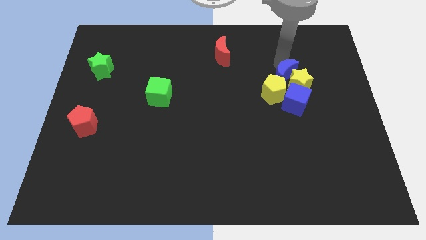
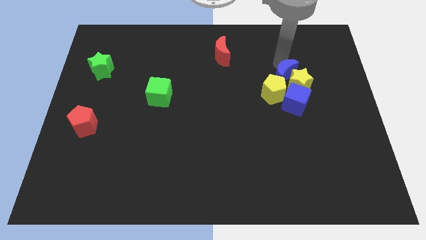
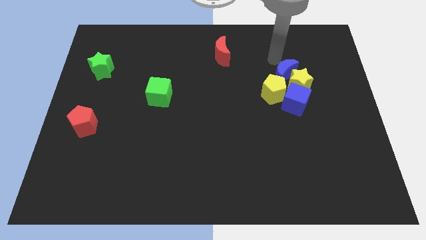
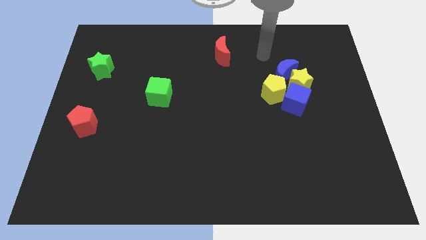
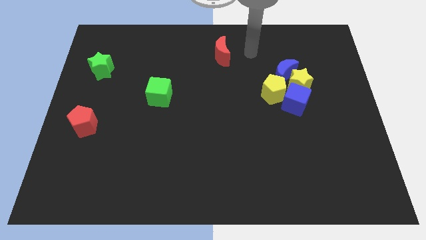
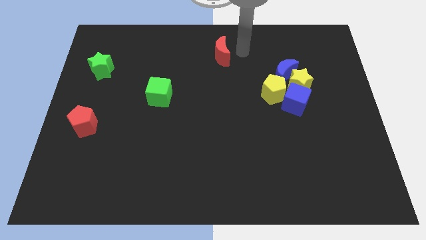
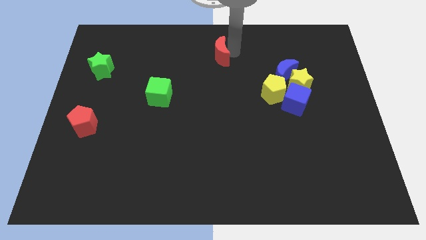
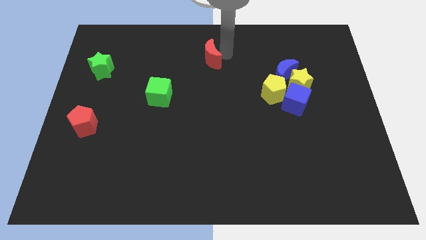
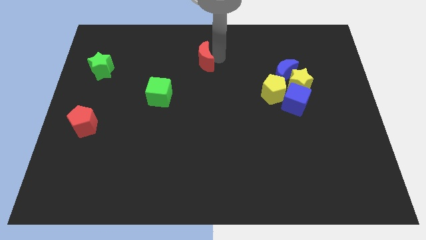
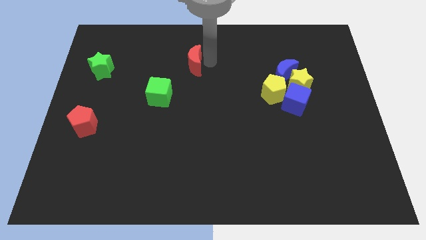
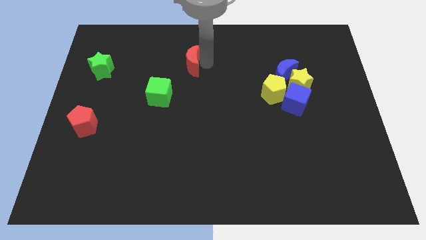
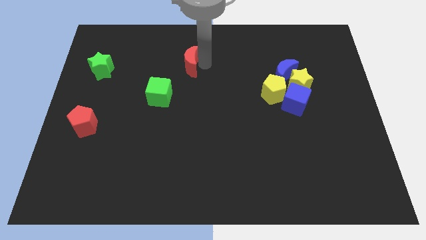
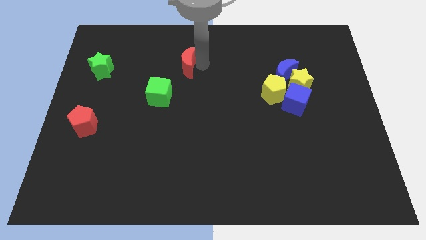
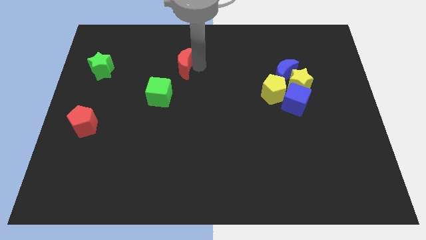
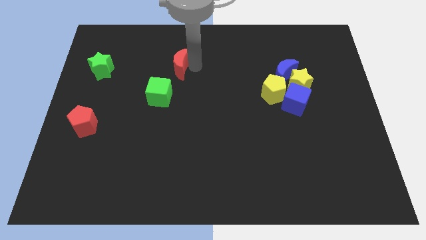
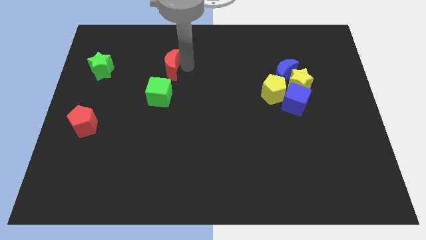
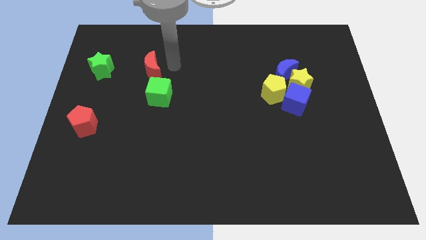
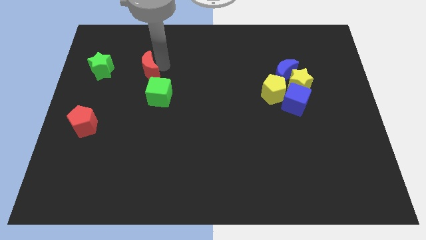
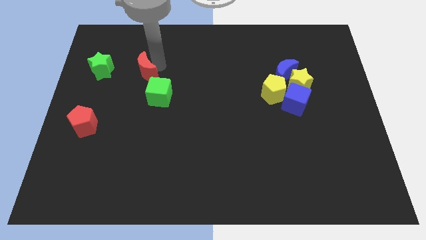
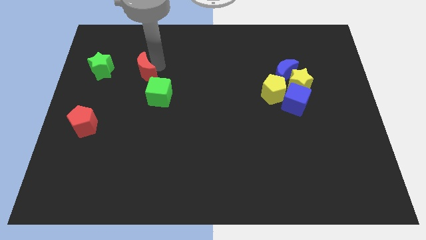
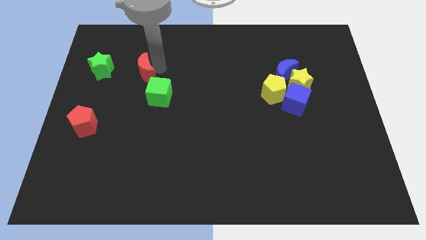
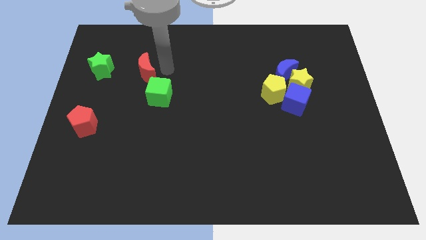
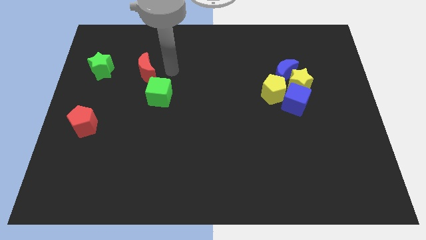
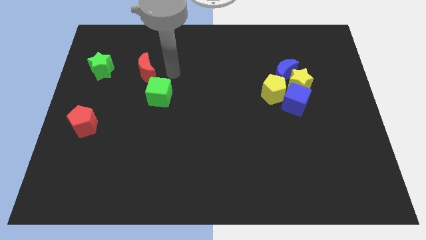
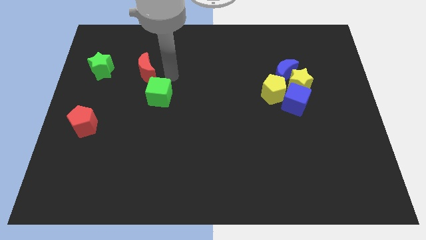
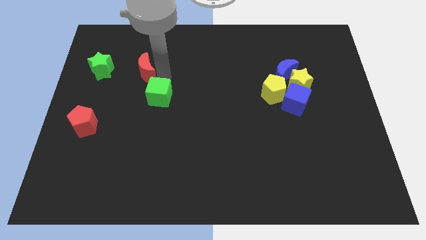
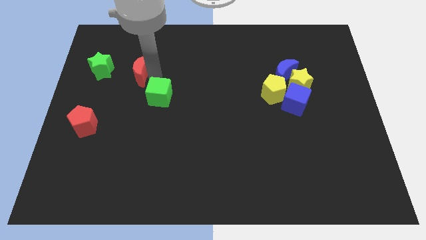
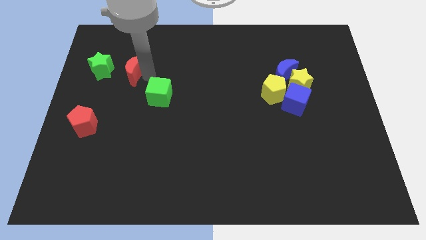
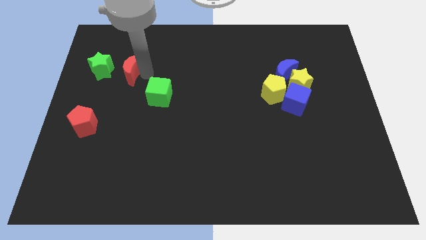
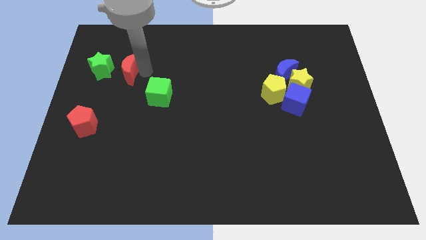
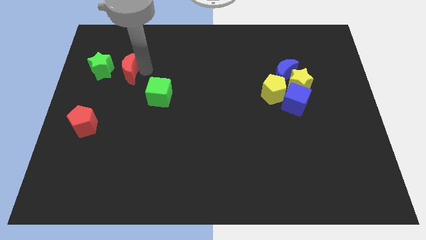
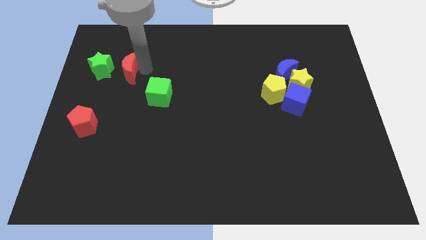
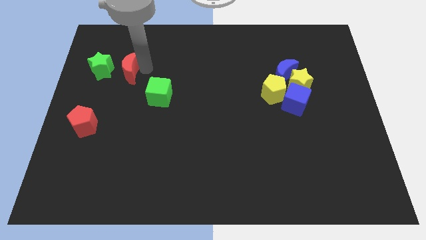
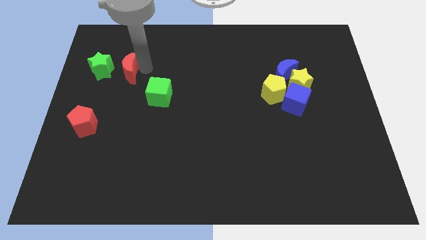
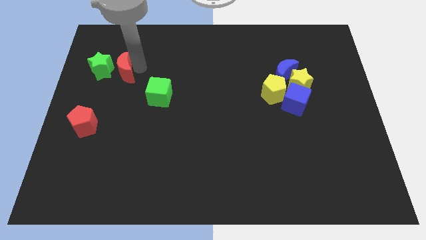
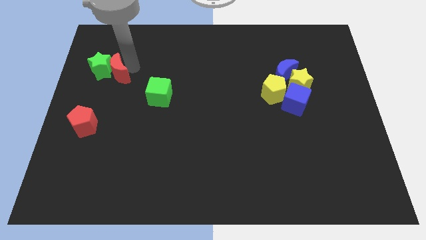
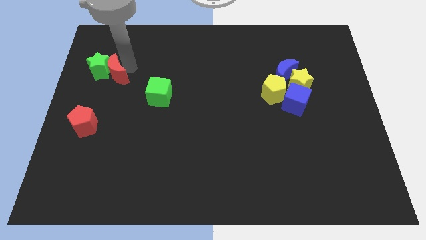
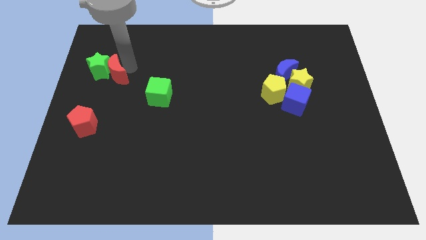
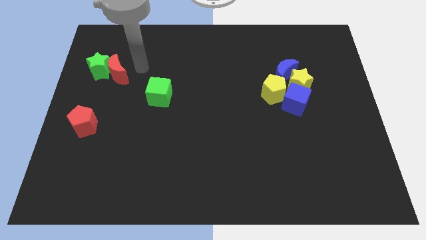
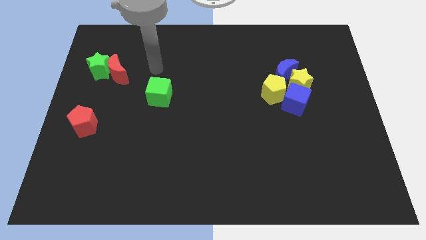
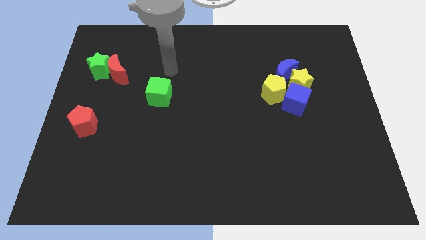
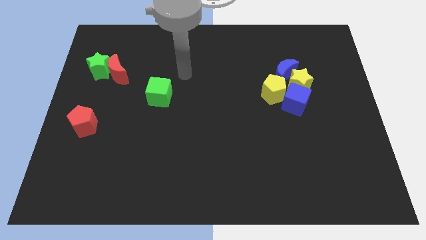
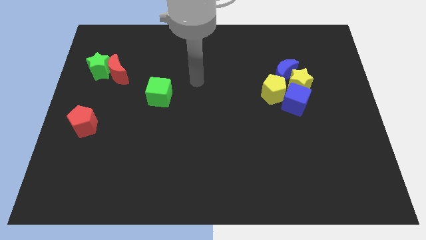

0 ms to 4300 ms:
push the red moon into right of the green star

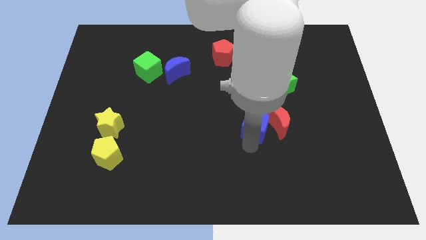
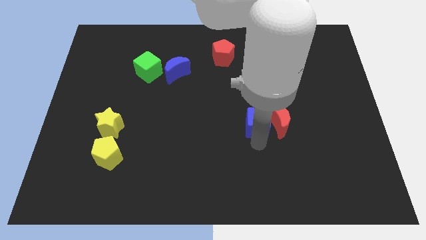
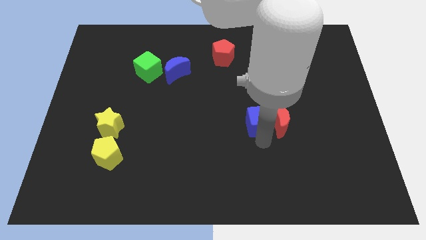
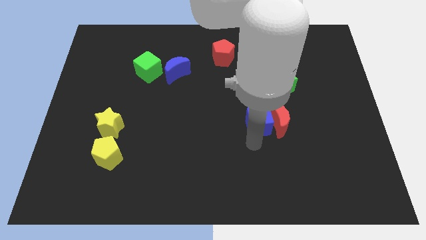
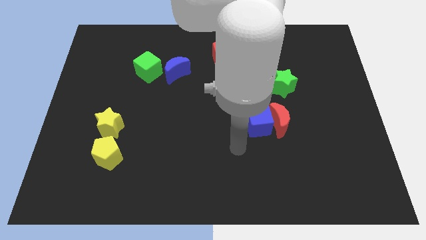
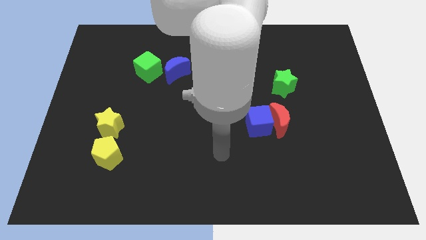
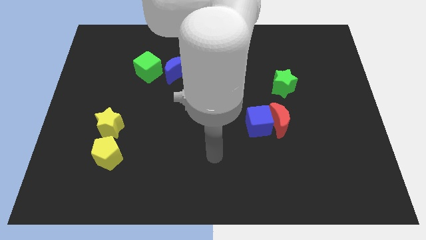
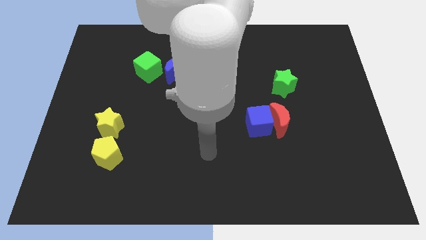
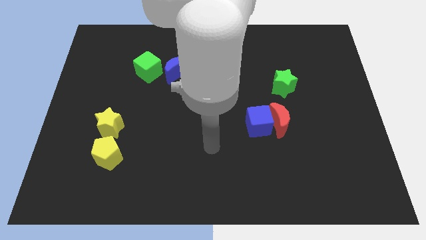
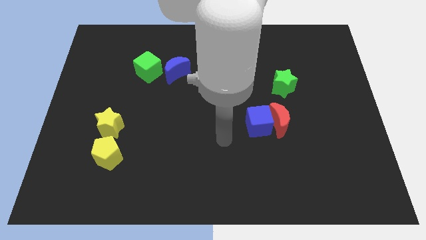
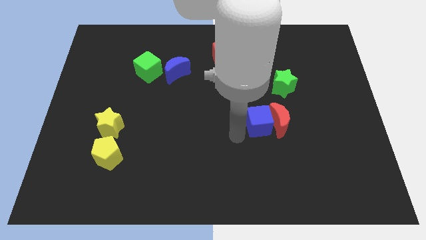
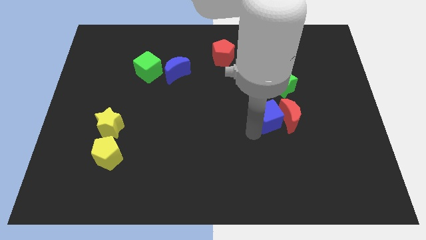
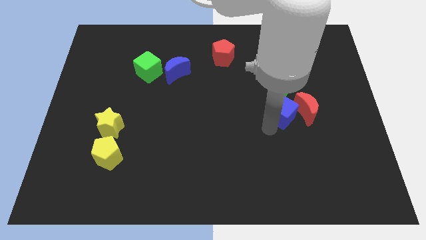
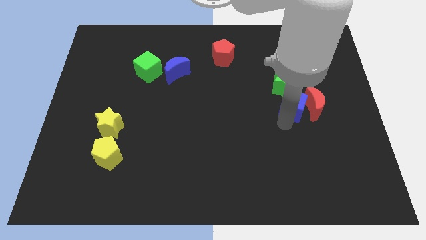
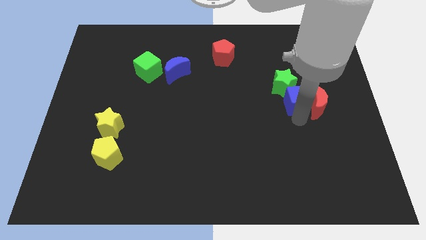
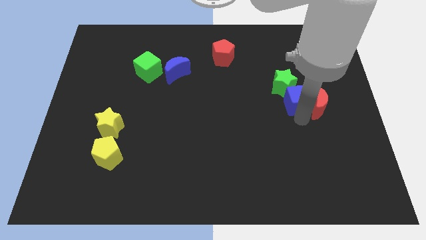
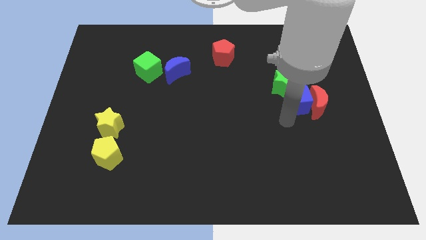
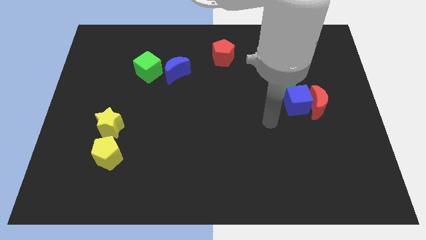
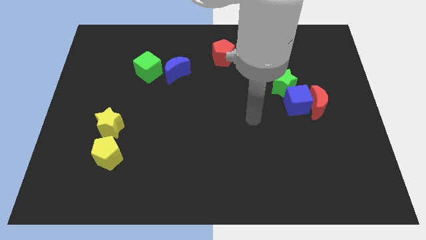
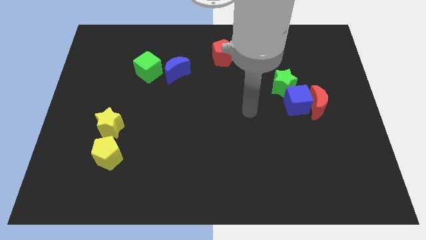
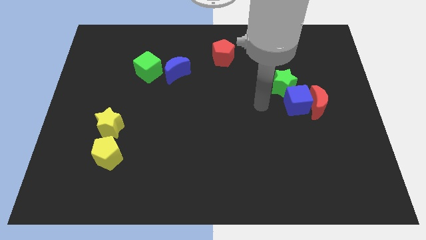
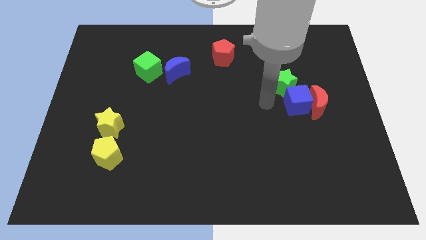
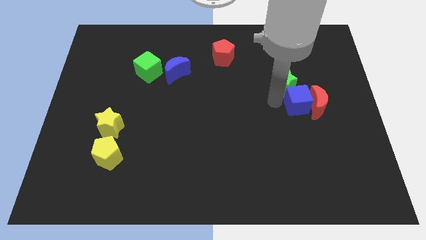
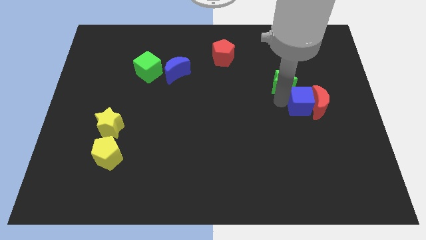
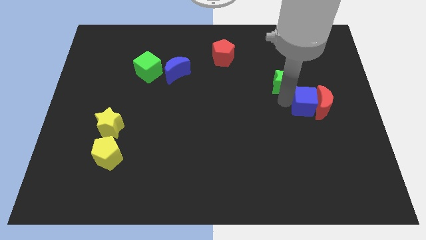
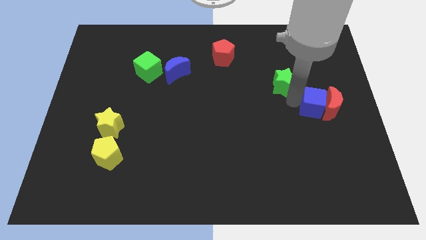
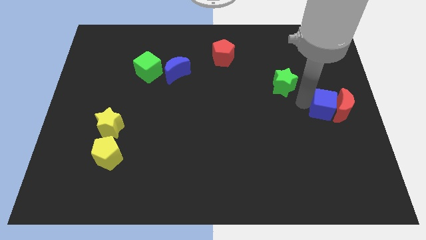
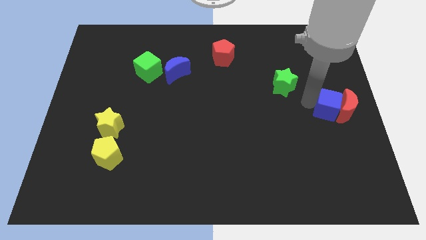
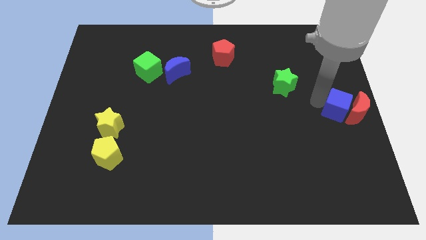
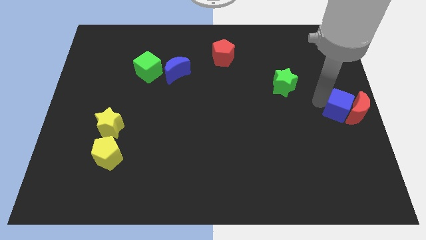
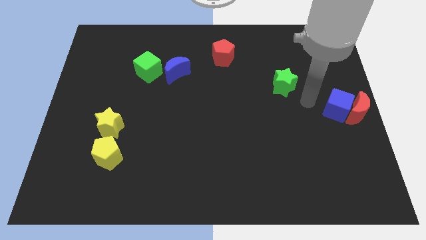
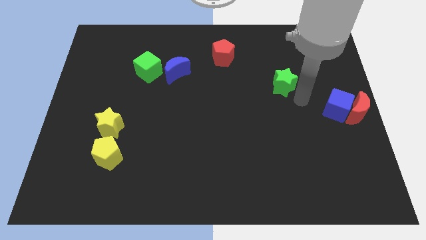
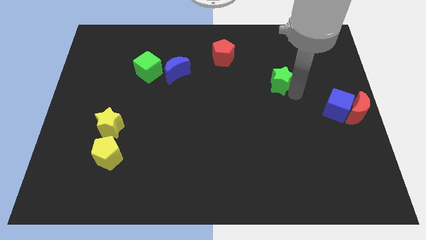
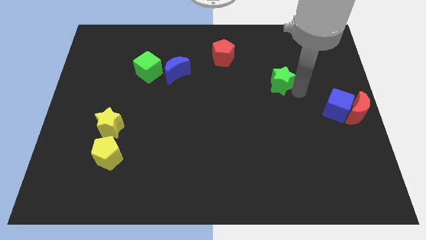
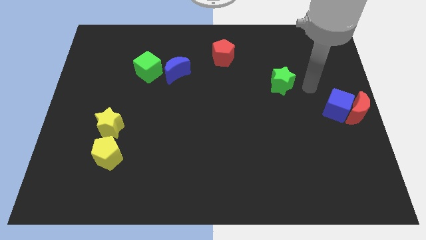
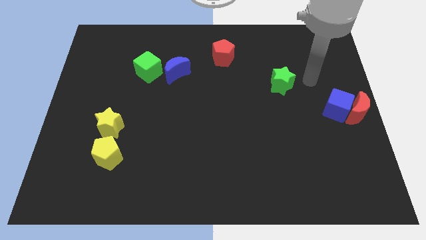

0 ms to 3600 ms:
move the blue cube and the red moon to the right center of the board

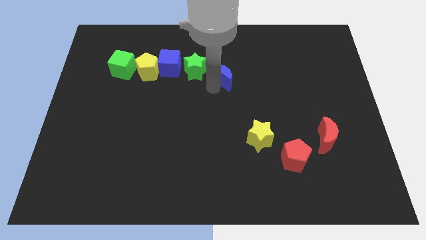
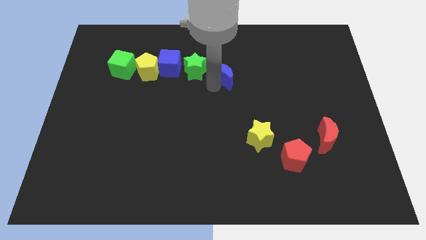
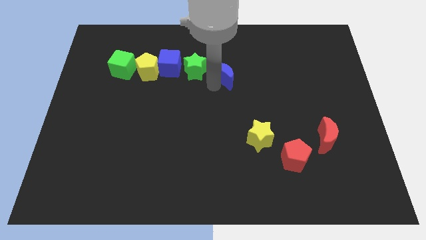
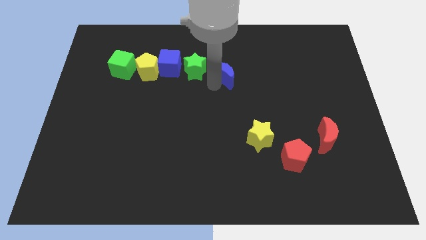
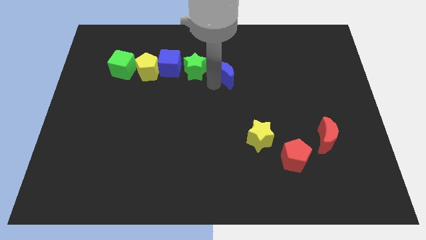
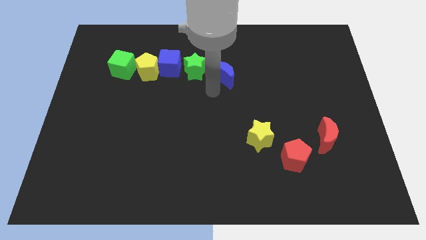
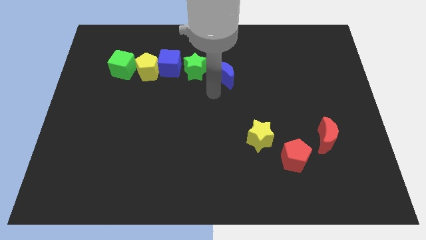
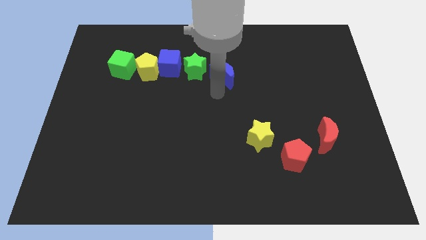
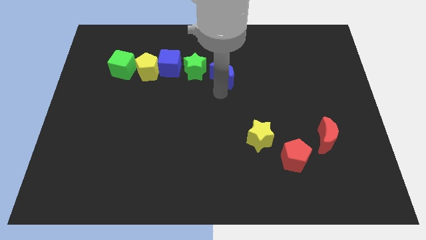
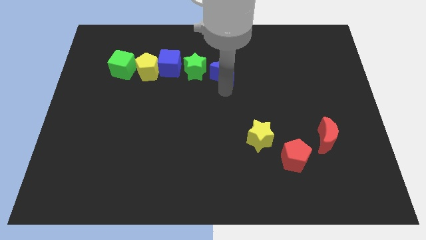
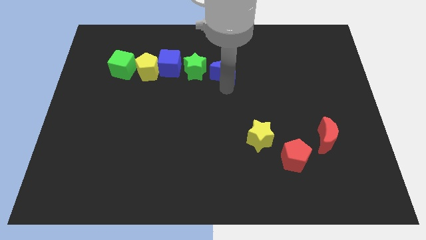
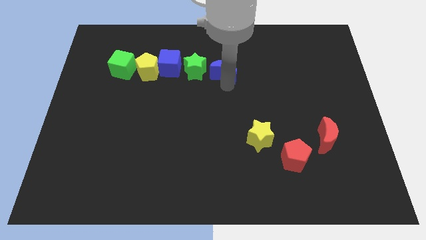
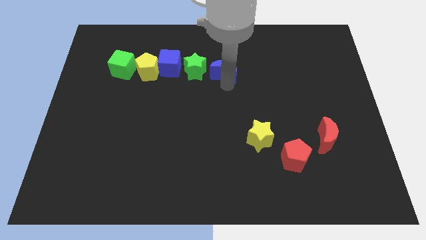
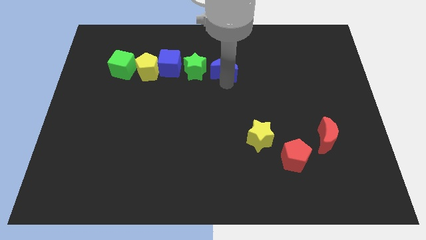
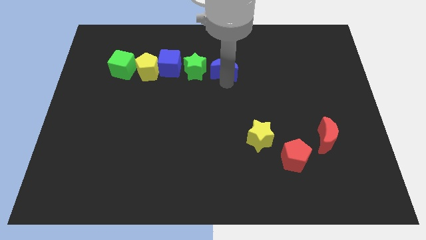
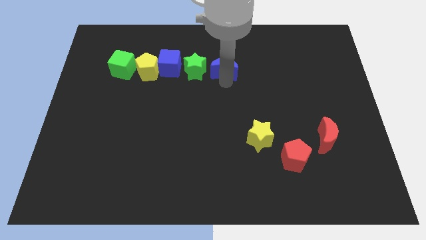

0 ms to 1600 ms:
place the blue moon right to the green star
